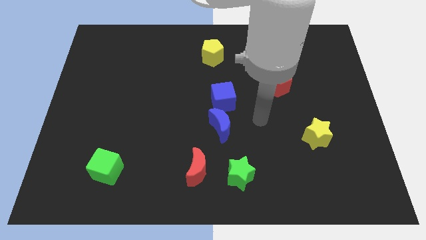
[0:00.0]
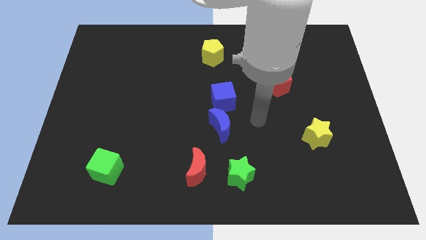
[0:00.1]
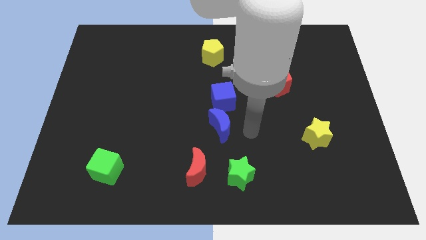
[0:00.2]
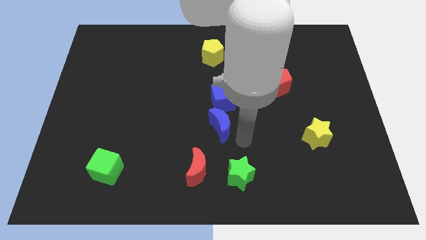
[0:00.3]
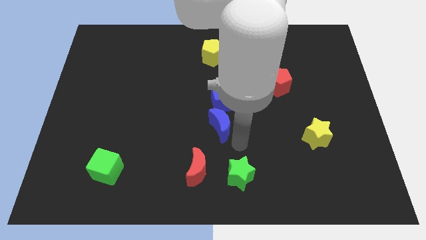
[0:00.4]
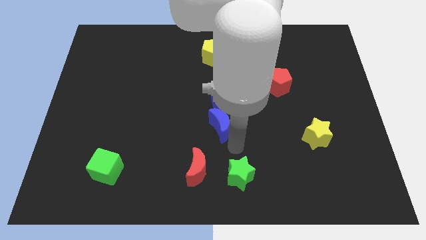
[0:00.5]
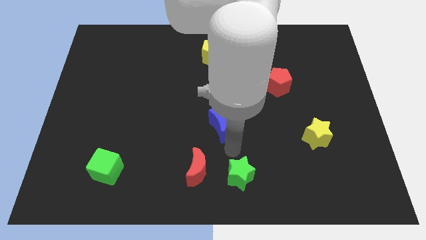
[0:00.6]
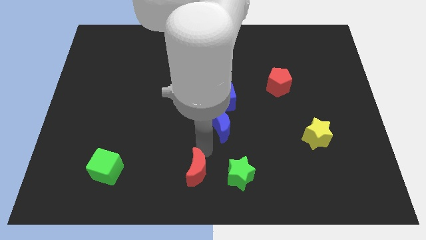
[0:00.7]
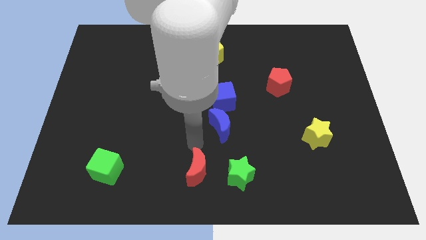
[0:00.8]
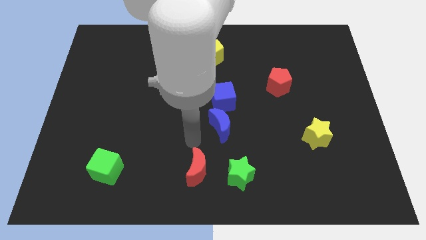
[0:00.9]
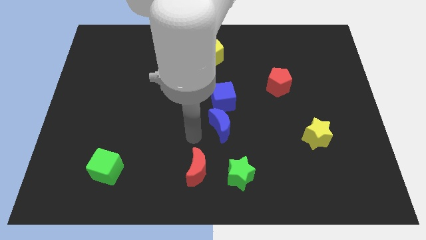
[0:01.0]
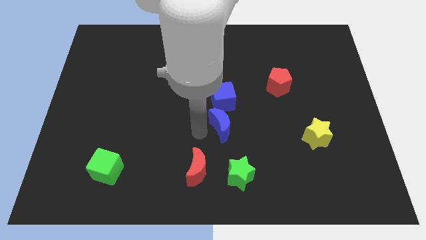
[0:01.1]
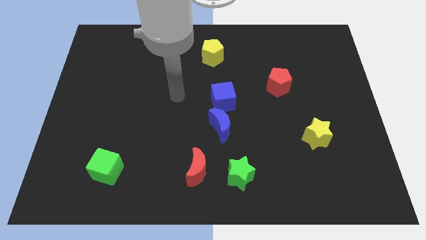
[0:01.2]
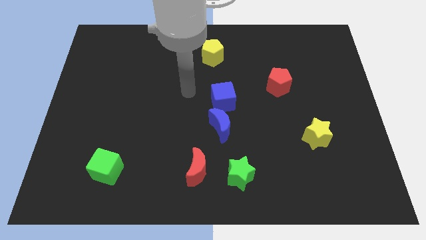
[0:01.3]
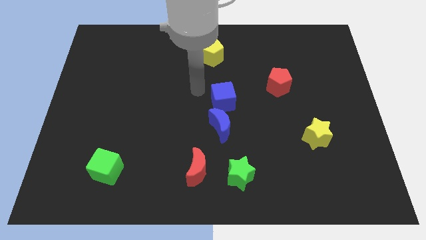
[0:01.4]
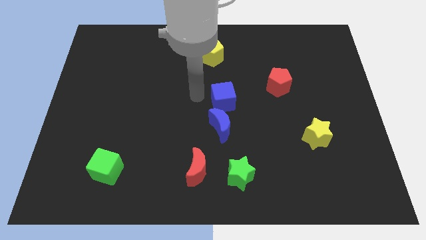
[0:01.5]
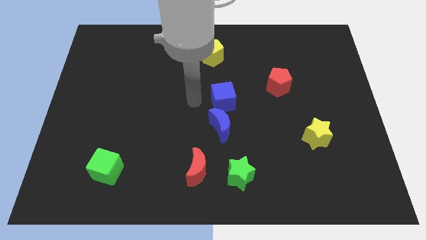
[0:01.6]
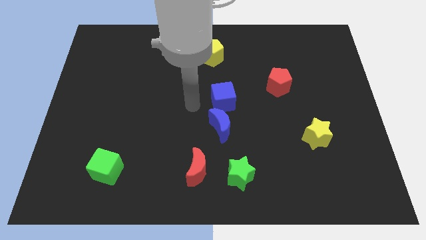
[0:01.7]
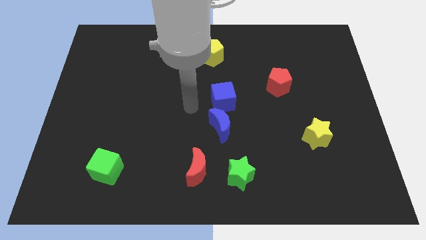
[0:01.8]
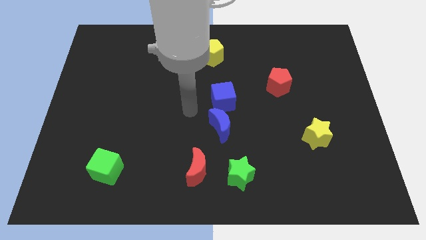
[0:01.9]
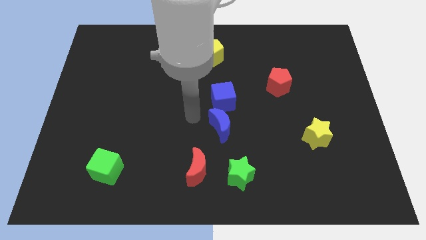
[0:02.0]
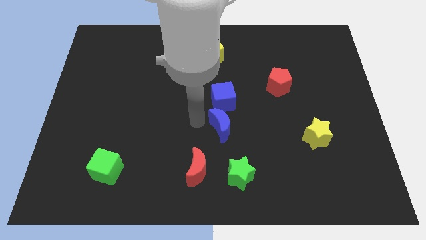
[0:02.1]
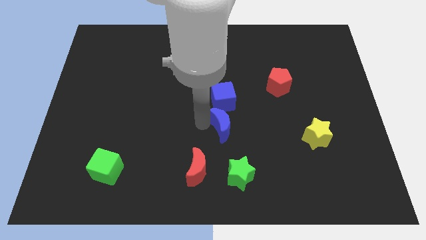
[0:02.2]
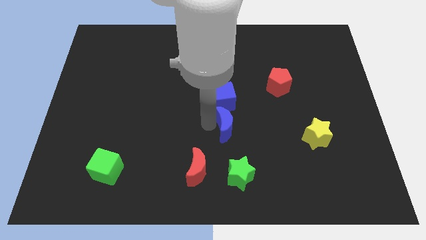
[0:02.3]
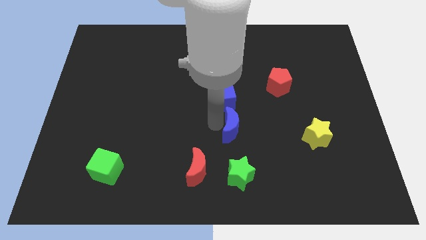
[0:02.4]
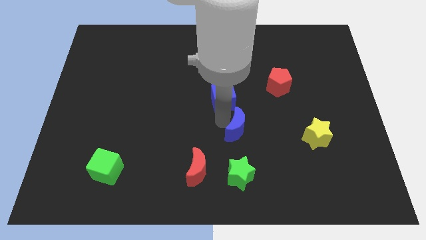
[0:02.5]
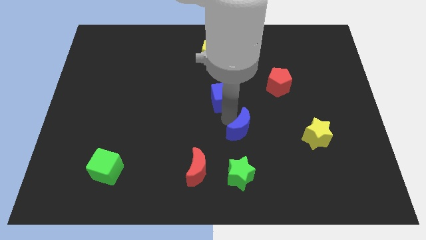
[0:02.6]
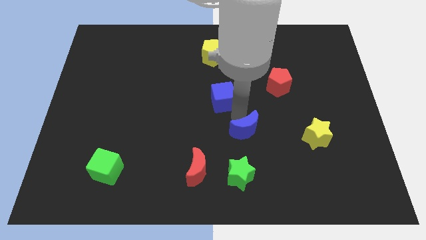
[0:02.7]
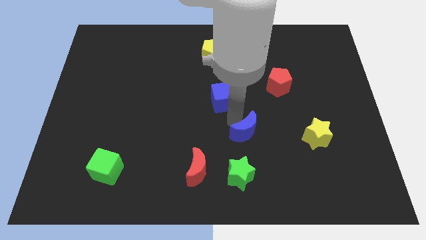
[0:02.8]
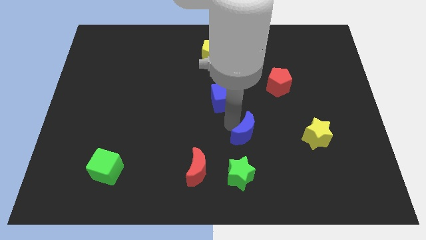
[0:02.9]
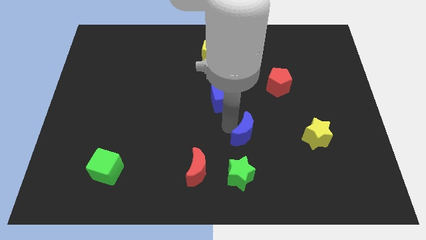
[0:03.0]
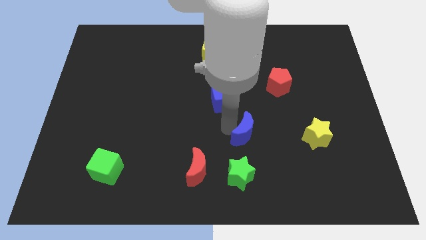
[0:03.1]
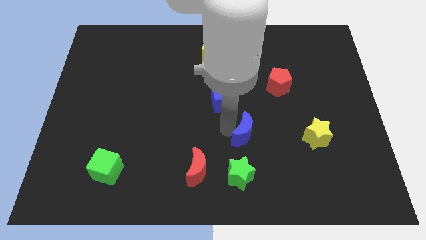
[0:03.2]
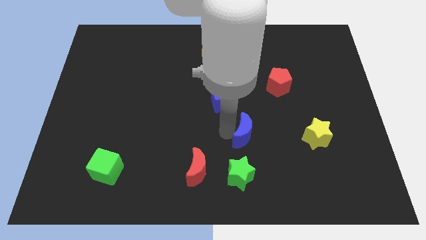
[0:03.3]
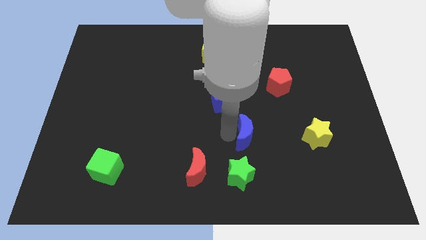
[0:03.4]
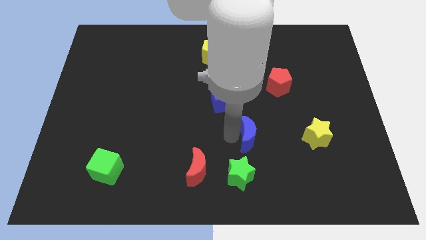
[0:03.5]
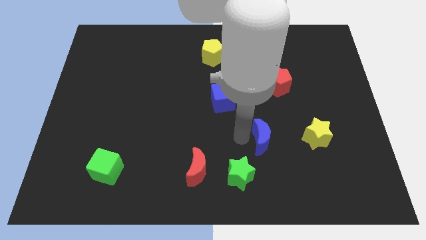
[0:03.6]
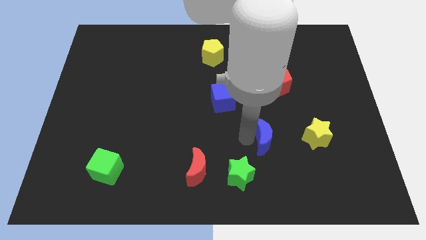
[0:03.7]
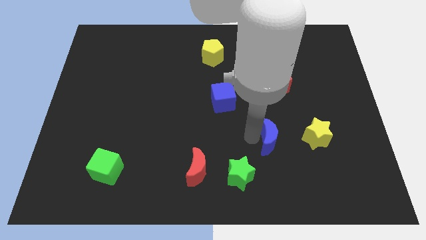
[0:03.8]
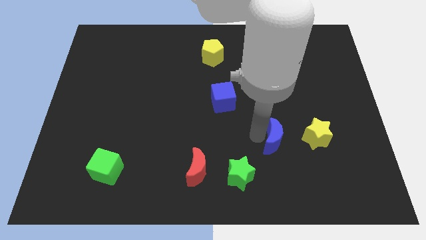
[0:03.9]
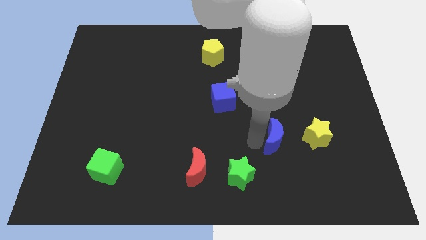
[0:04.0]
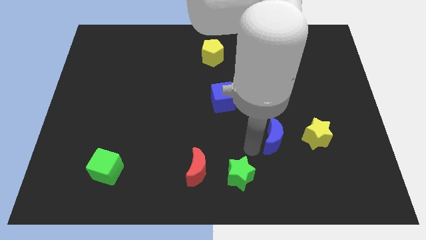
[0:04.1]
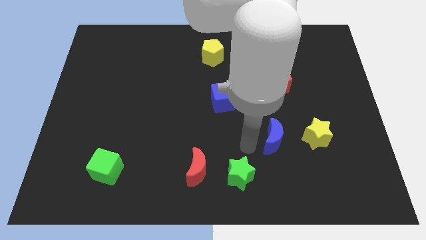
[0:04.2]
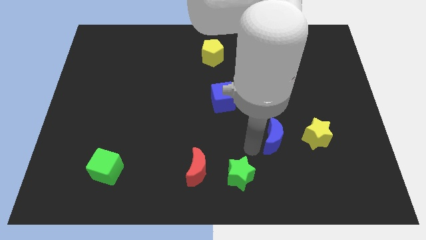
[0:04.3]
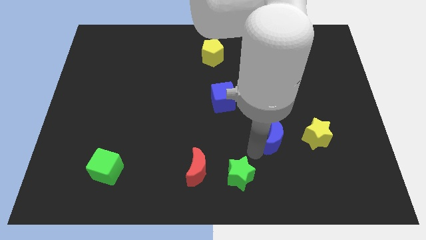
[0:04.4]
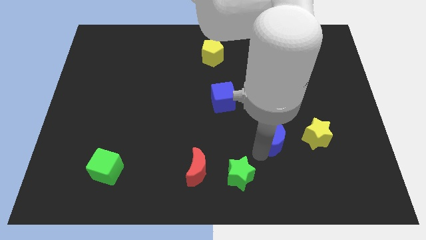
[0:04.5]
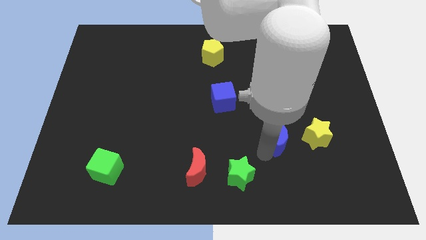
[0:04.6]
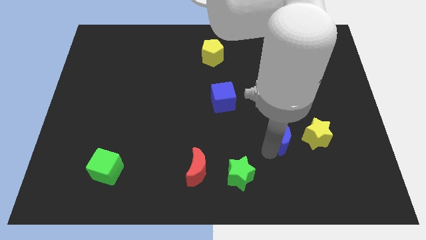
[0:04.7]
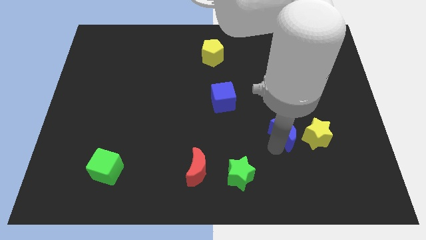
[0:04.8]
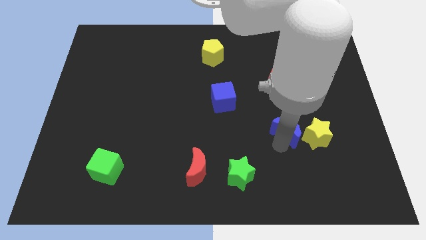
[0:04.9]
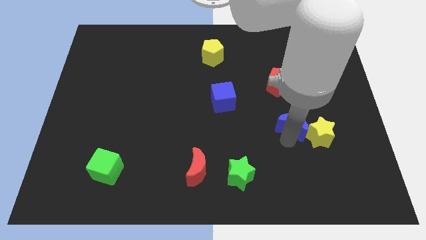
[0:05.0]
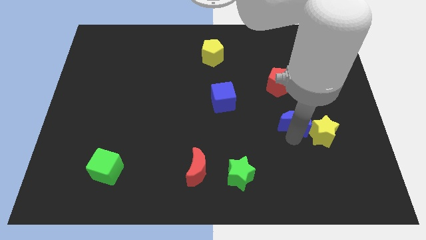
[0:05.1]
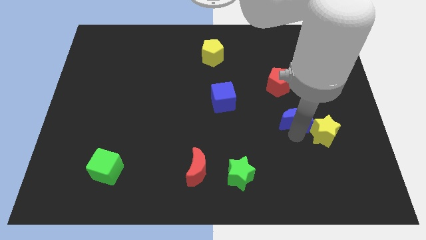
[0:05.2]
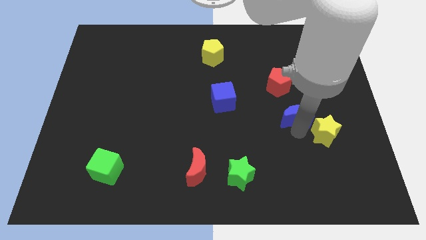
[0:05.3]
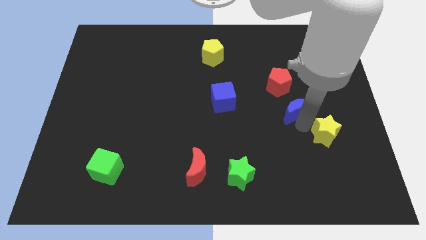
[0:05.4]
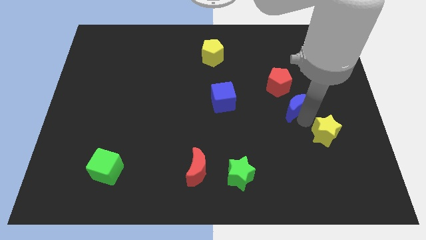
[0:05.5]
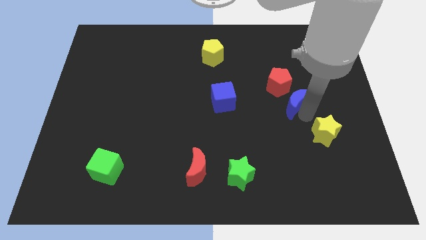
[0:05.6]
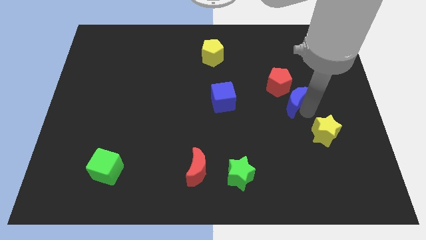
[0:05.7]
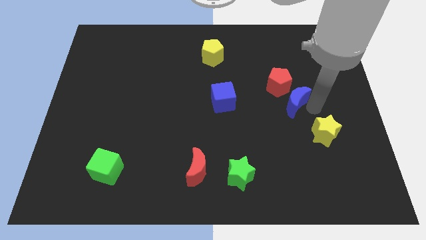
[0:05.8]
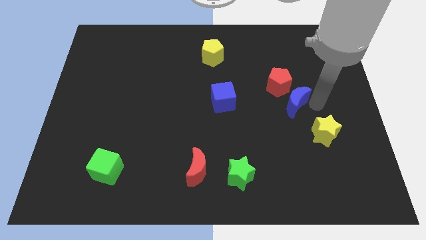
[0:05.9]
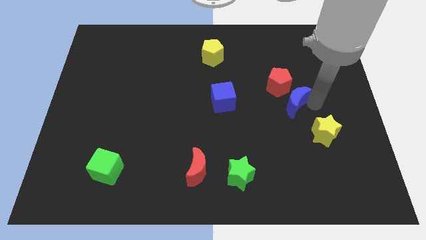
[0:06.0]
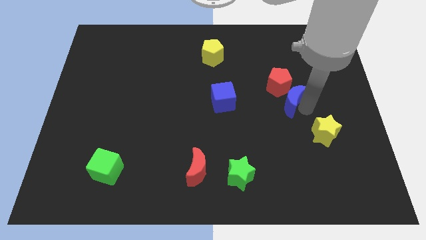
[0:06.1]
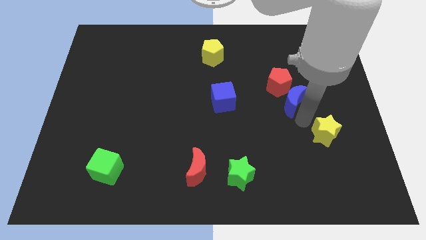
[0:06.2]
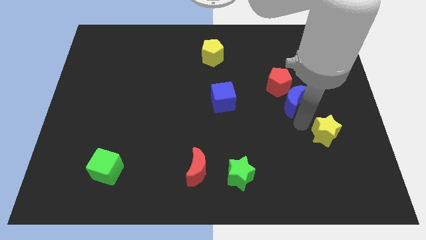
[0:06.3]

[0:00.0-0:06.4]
push the blue moon next to the red pentagon

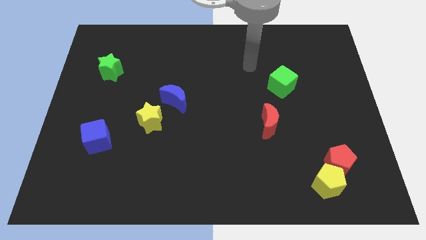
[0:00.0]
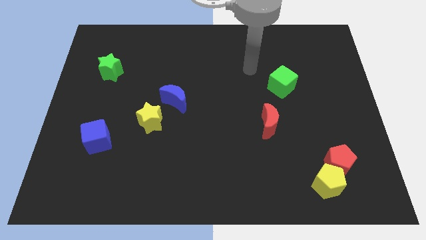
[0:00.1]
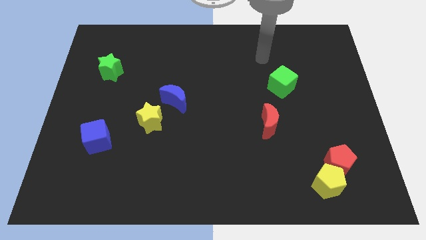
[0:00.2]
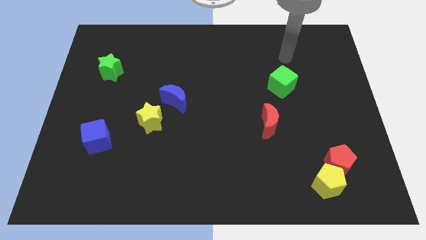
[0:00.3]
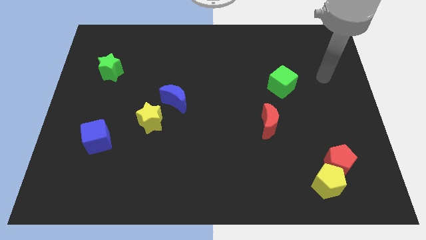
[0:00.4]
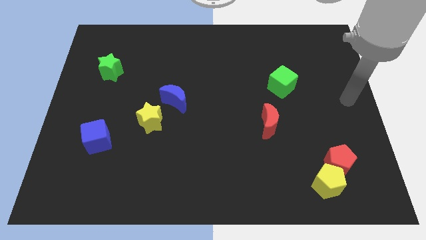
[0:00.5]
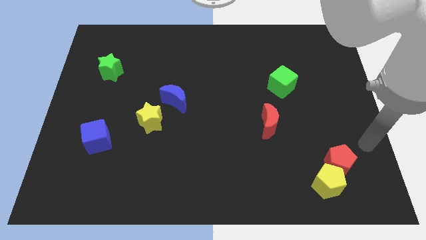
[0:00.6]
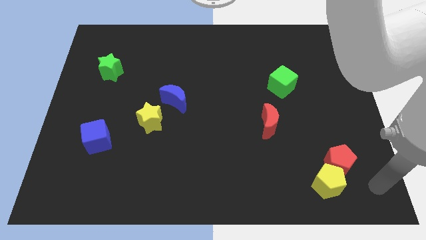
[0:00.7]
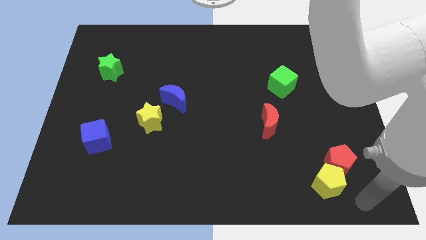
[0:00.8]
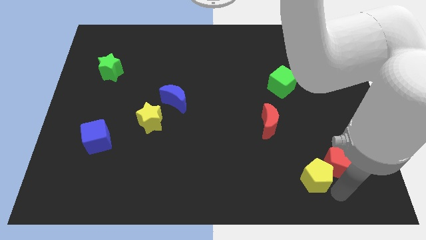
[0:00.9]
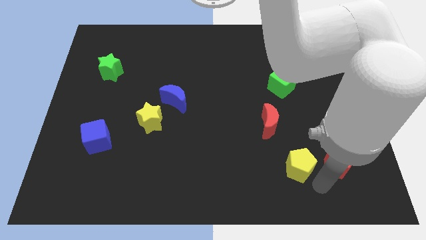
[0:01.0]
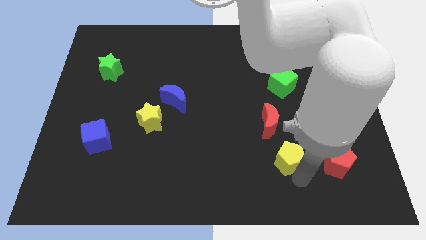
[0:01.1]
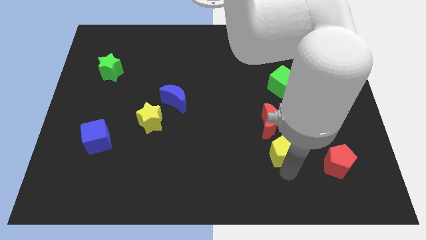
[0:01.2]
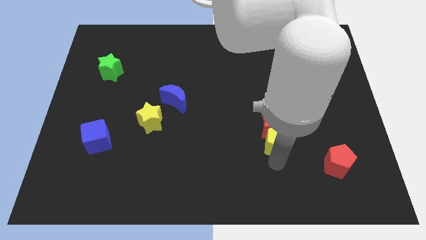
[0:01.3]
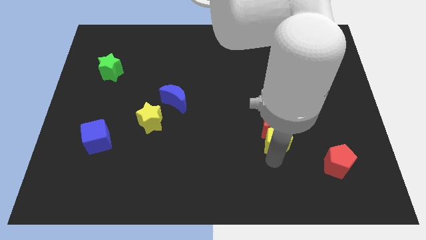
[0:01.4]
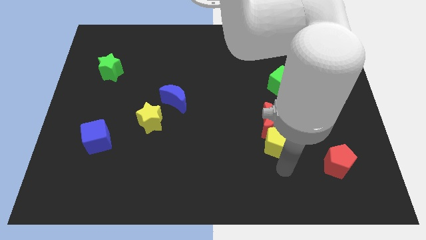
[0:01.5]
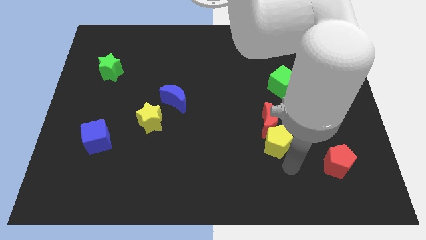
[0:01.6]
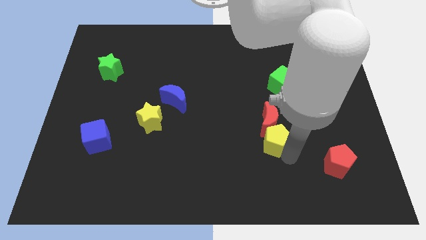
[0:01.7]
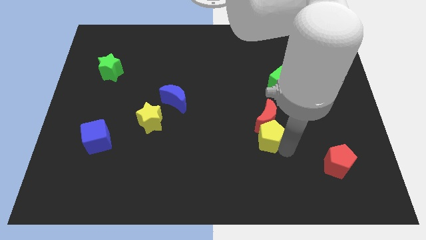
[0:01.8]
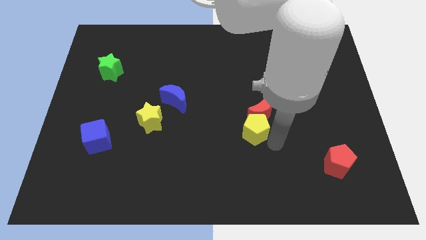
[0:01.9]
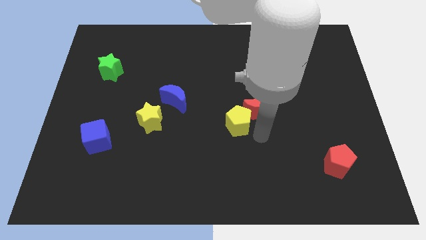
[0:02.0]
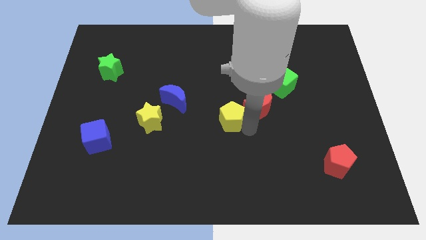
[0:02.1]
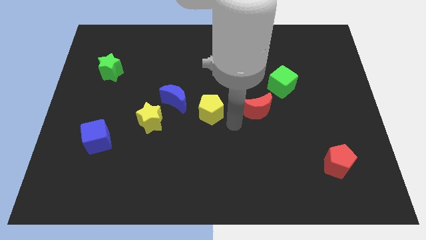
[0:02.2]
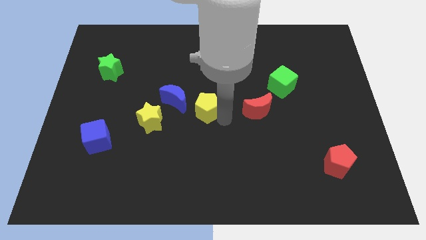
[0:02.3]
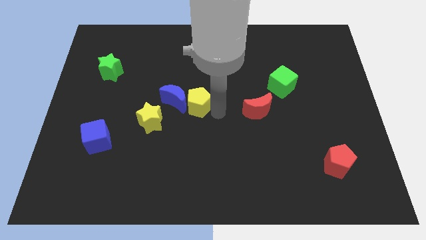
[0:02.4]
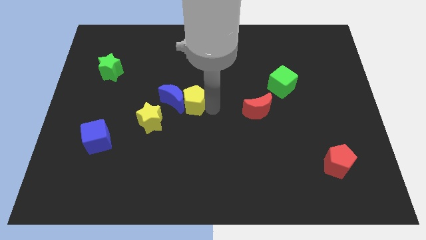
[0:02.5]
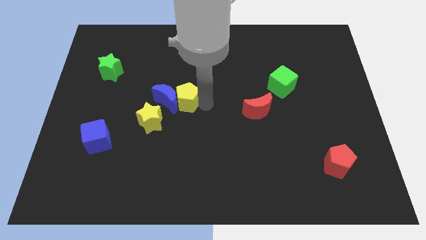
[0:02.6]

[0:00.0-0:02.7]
slide the yellow pentagon next to the blue moon
